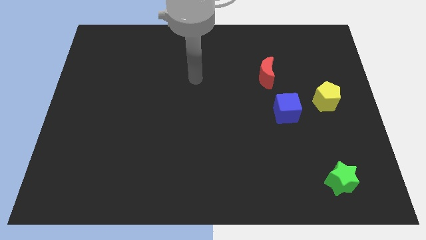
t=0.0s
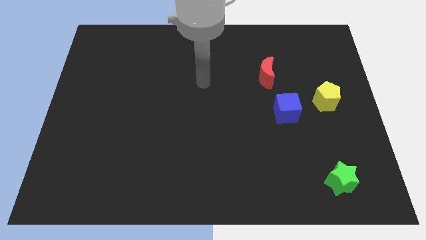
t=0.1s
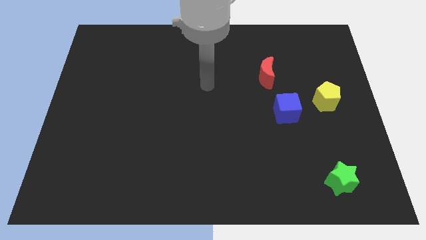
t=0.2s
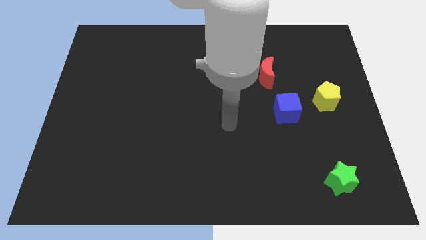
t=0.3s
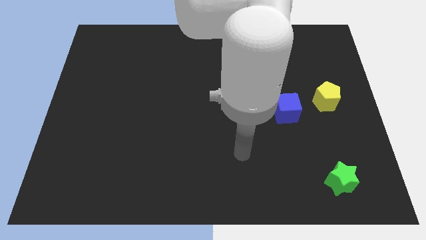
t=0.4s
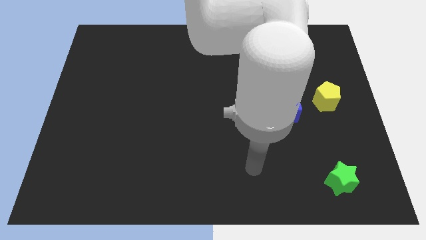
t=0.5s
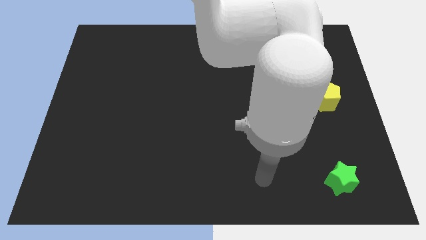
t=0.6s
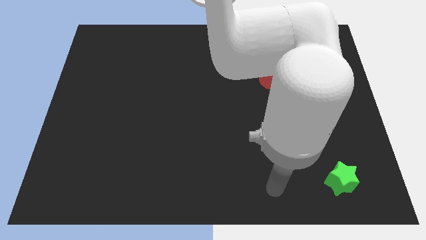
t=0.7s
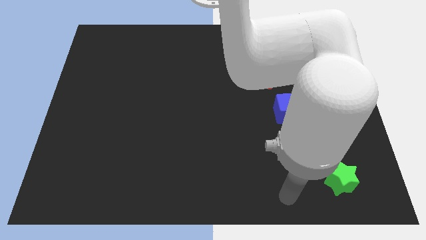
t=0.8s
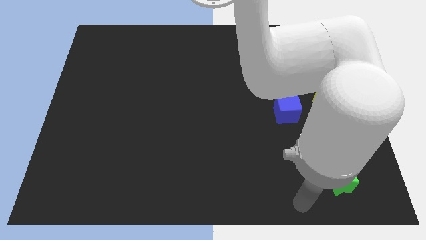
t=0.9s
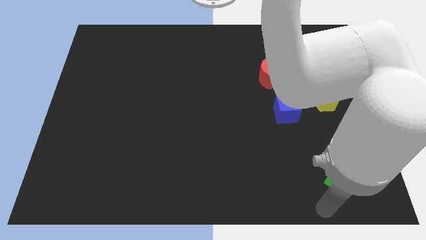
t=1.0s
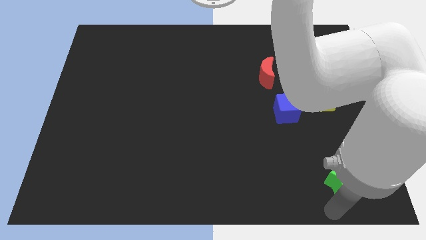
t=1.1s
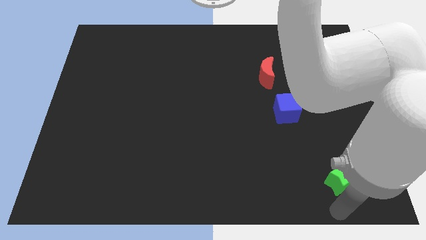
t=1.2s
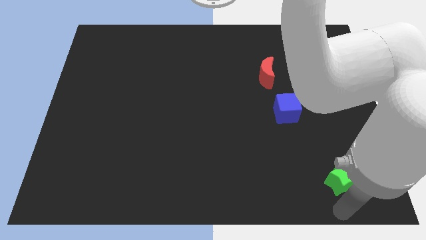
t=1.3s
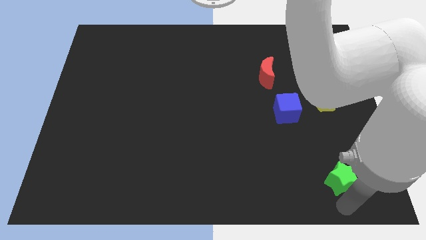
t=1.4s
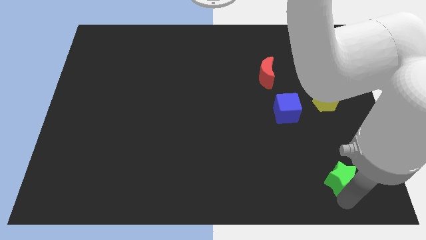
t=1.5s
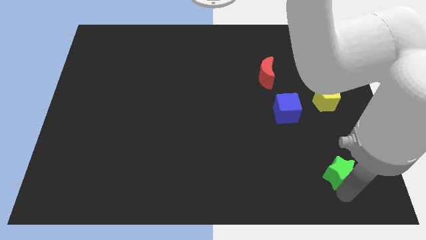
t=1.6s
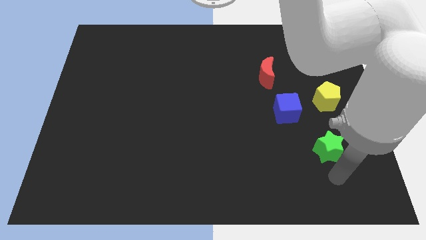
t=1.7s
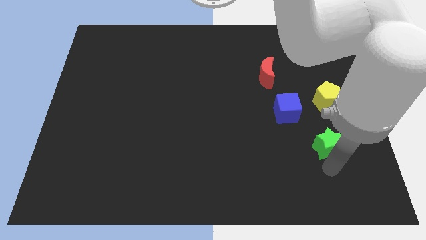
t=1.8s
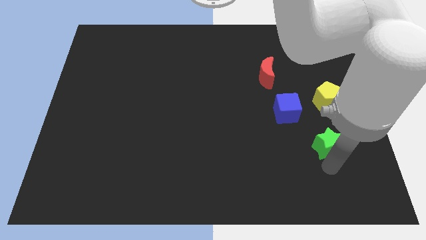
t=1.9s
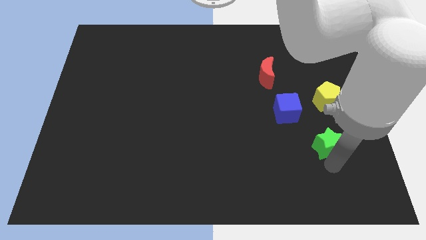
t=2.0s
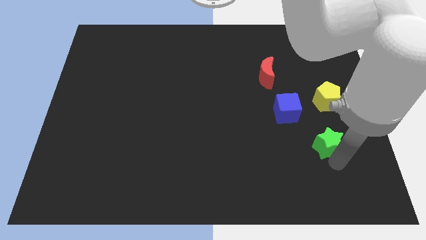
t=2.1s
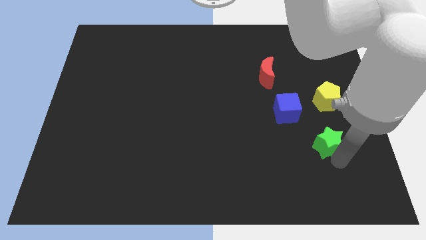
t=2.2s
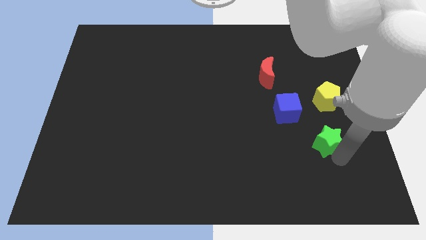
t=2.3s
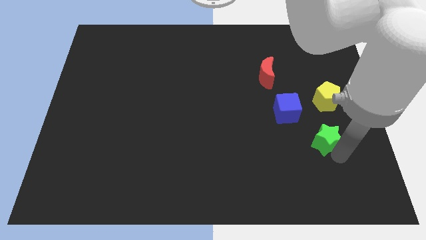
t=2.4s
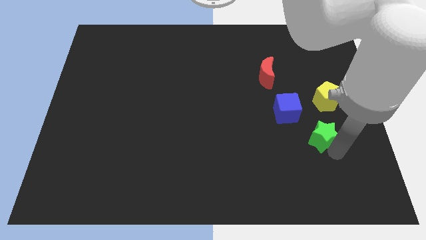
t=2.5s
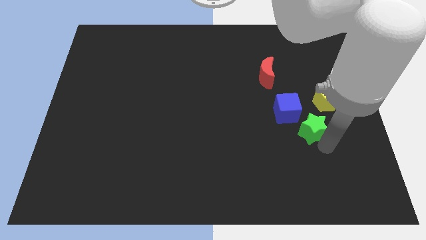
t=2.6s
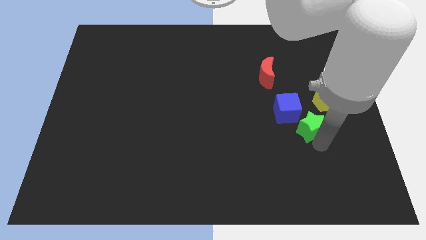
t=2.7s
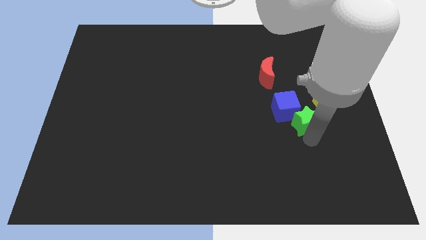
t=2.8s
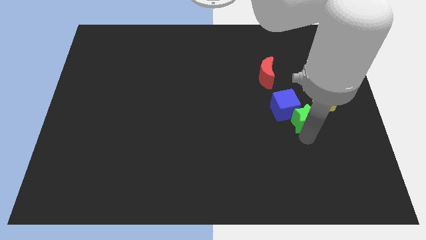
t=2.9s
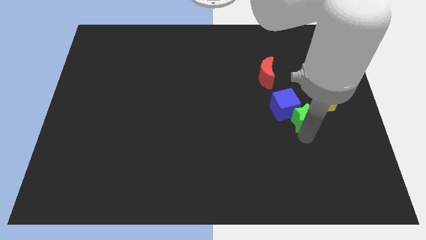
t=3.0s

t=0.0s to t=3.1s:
put the star to the blue block

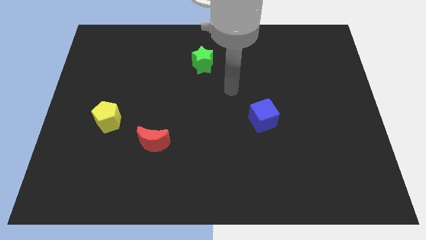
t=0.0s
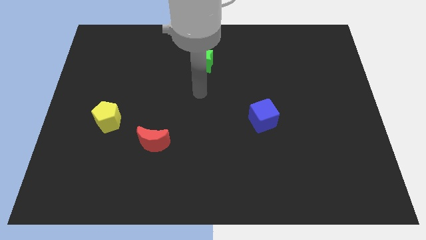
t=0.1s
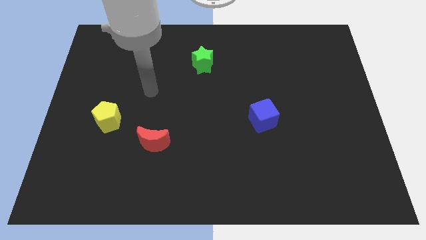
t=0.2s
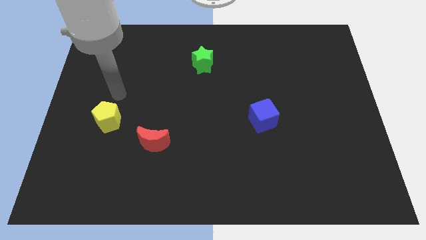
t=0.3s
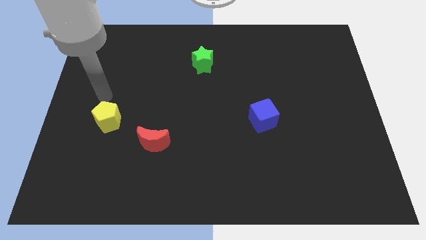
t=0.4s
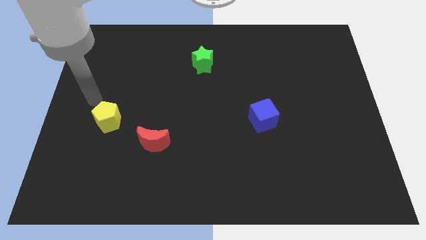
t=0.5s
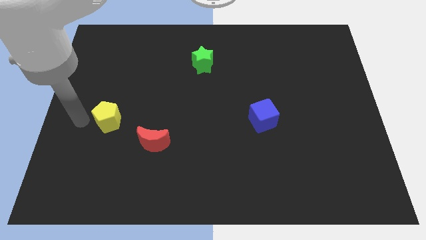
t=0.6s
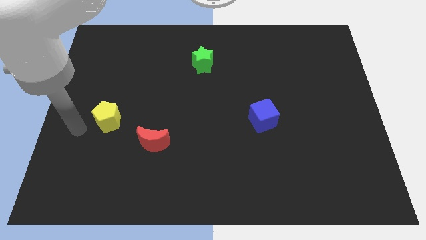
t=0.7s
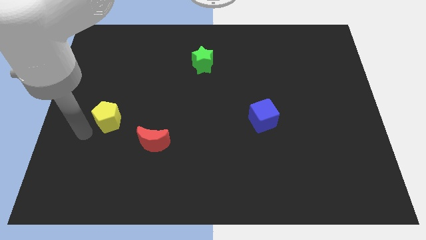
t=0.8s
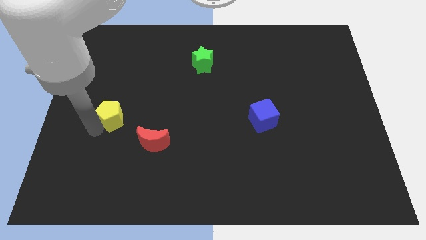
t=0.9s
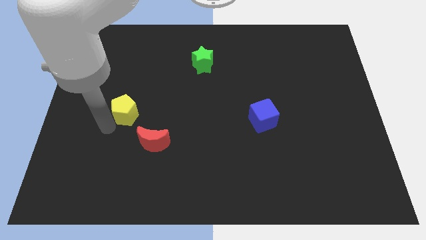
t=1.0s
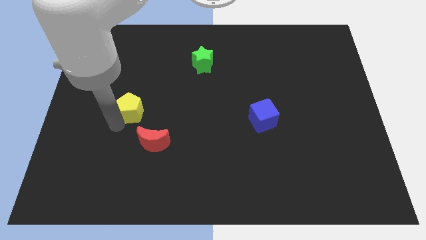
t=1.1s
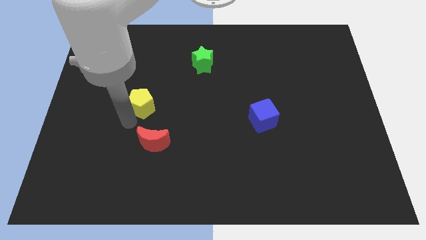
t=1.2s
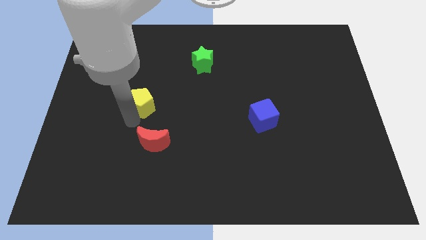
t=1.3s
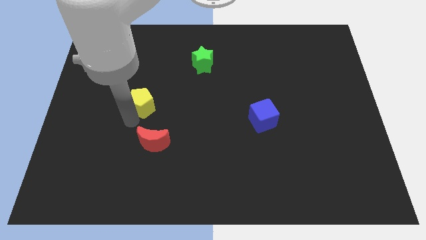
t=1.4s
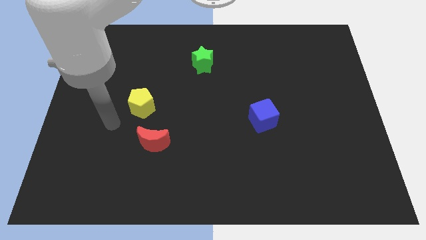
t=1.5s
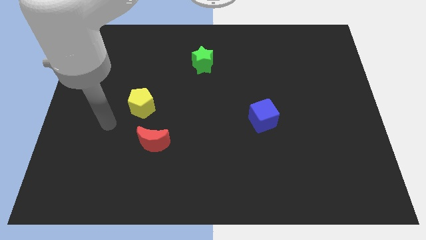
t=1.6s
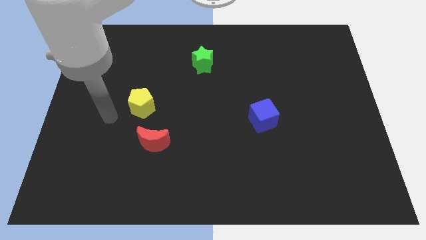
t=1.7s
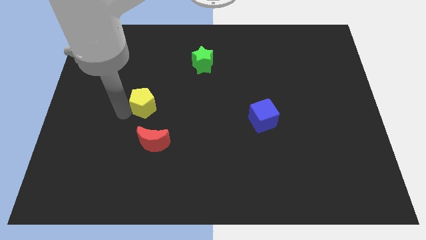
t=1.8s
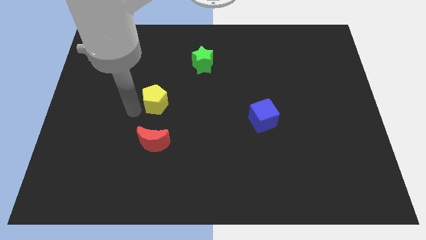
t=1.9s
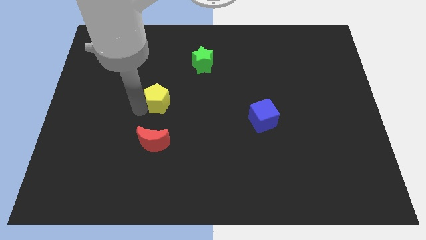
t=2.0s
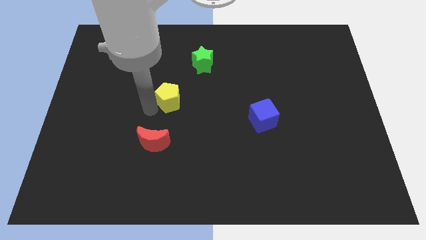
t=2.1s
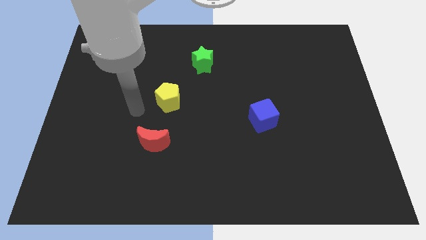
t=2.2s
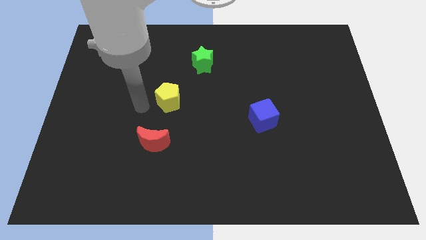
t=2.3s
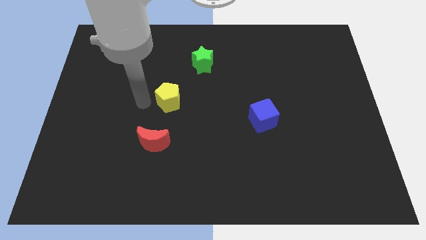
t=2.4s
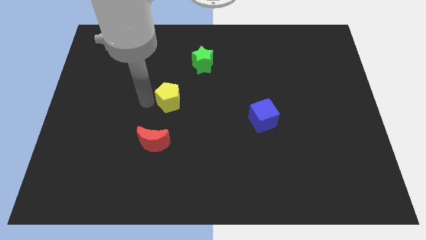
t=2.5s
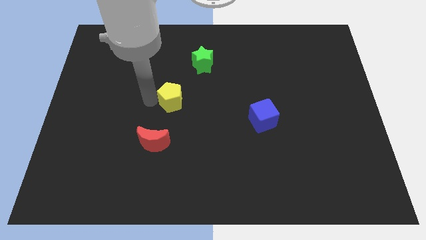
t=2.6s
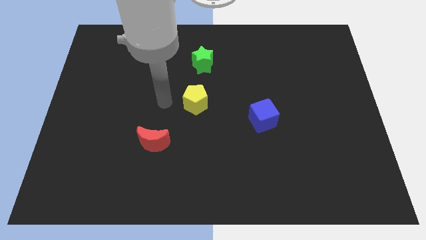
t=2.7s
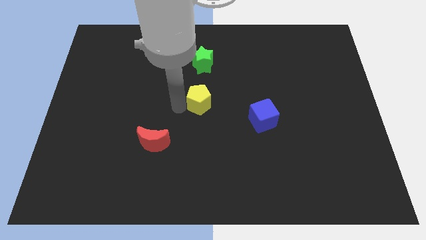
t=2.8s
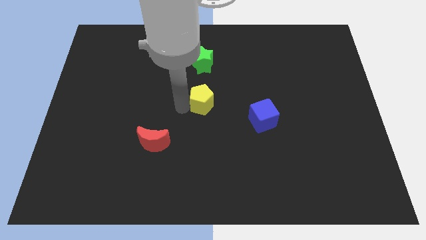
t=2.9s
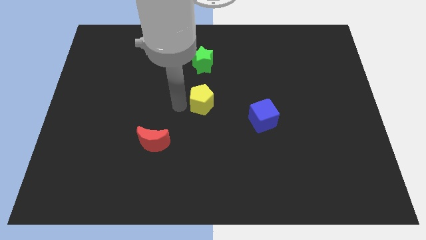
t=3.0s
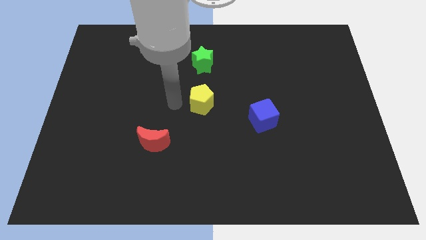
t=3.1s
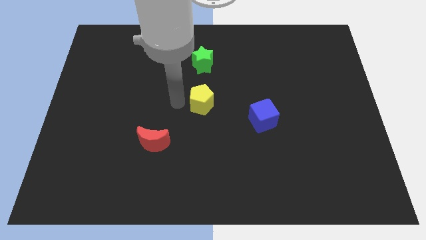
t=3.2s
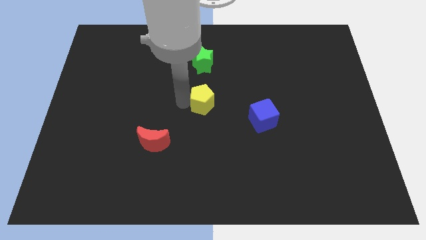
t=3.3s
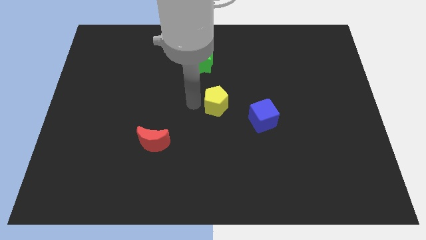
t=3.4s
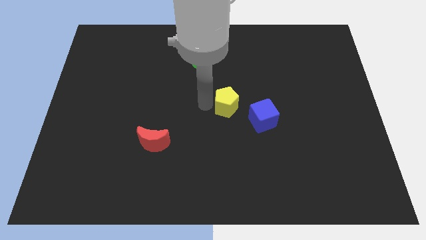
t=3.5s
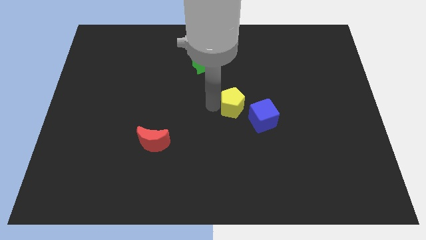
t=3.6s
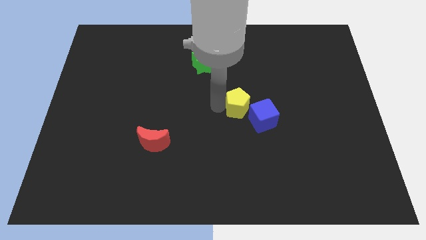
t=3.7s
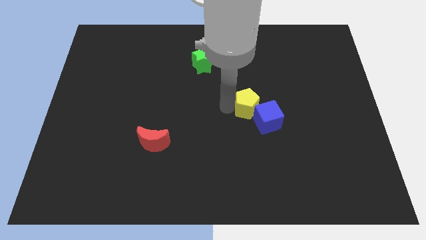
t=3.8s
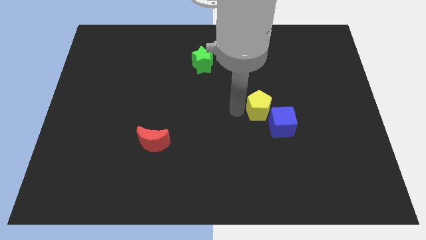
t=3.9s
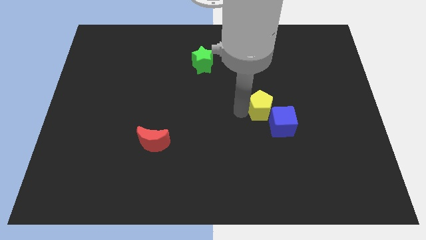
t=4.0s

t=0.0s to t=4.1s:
push the yellow pentagon to the blue cube

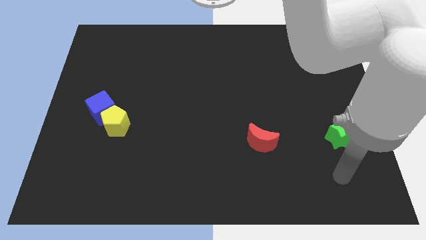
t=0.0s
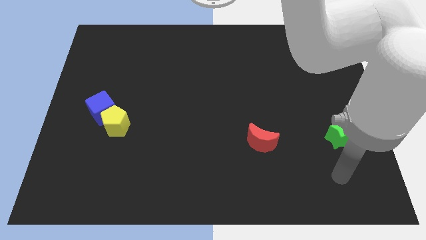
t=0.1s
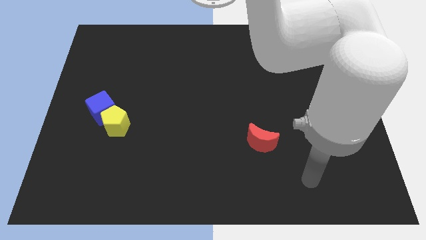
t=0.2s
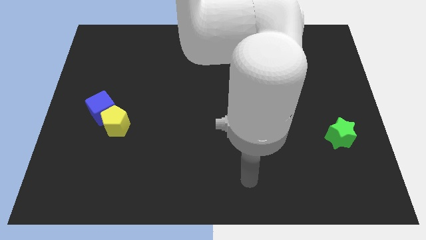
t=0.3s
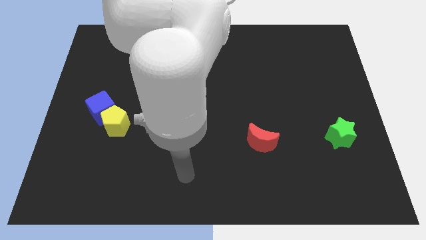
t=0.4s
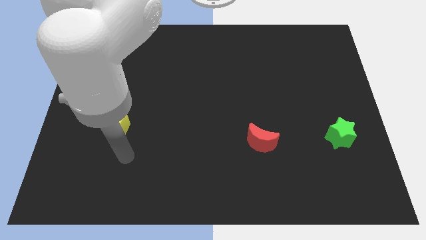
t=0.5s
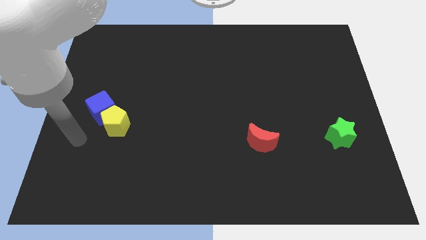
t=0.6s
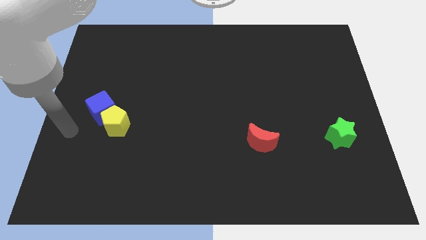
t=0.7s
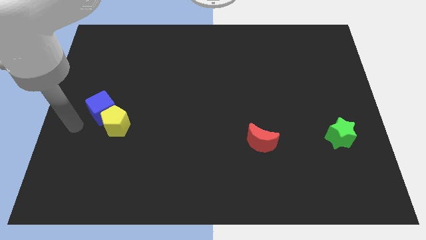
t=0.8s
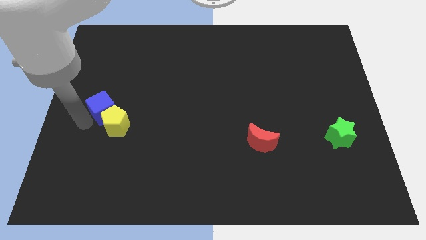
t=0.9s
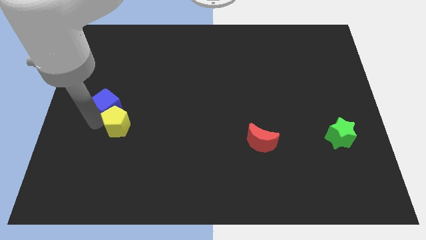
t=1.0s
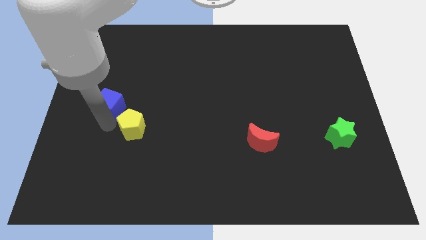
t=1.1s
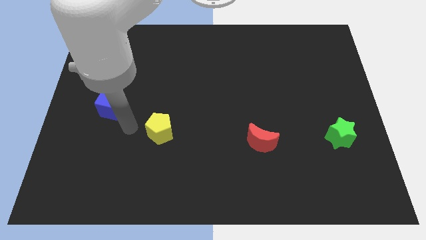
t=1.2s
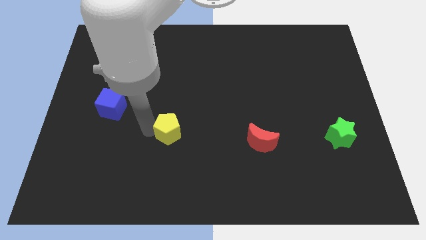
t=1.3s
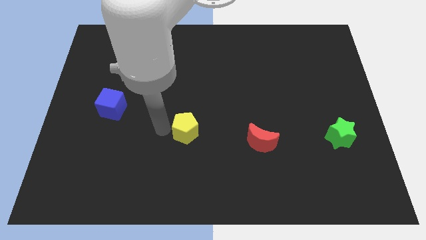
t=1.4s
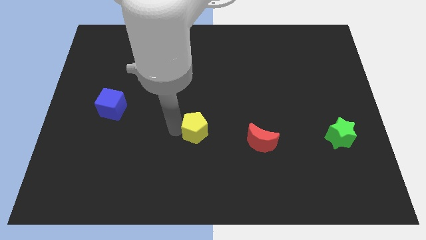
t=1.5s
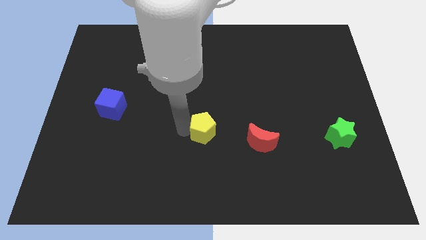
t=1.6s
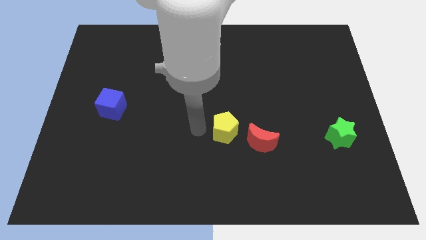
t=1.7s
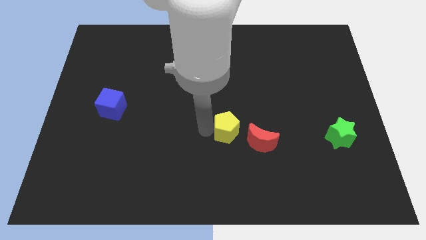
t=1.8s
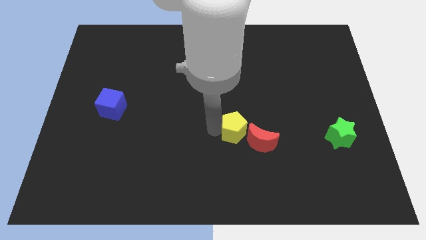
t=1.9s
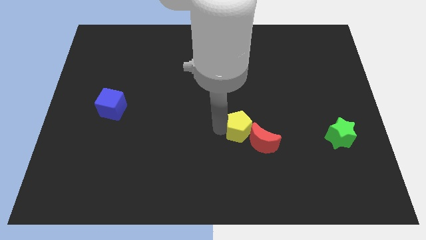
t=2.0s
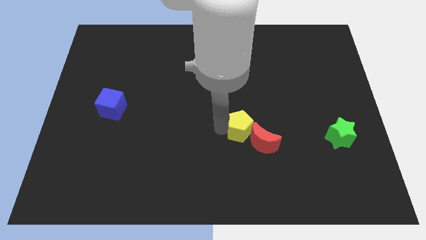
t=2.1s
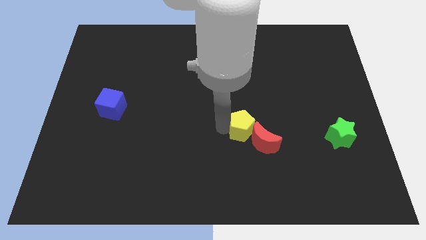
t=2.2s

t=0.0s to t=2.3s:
slide the pentagon next to the red block
